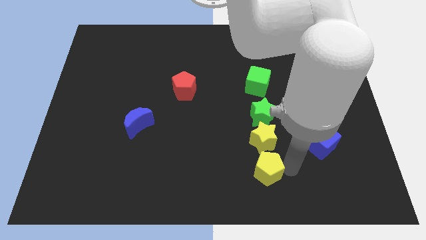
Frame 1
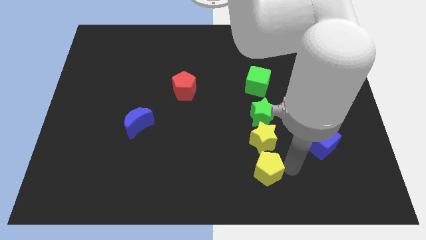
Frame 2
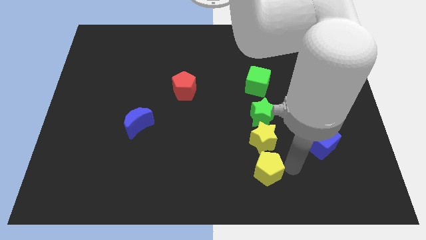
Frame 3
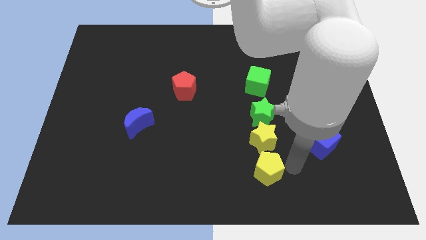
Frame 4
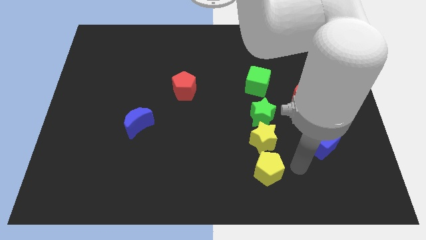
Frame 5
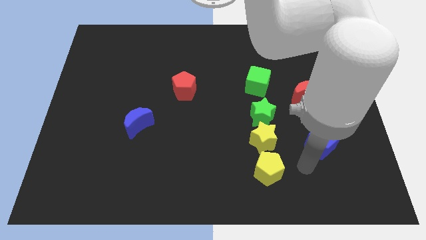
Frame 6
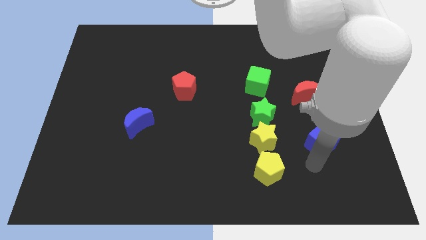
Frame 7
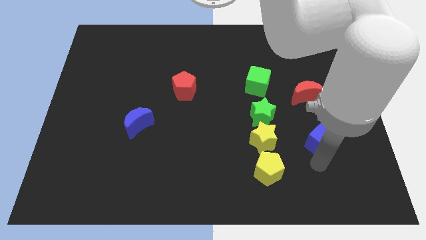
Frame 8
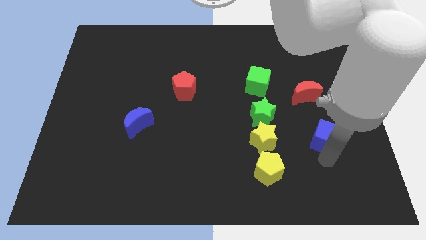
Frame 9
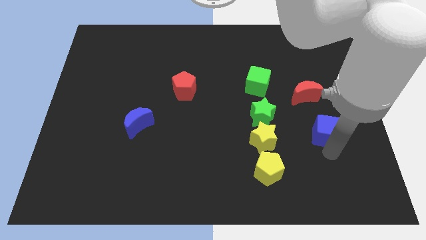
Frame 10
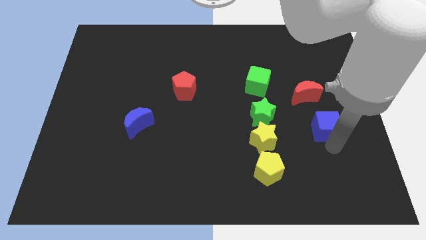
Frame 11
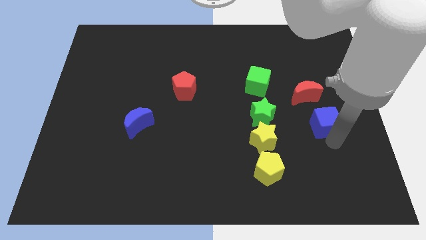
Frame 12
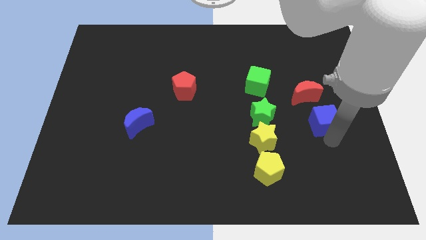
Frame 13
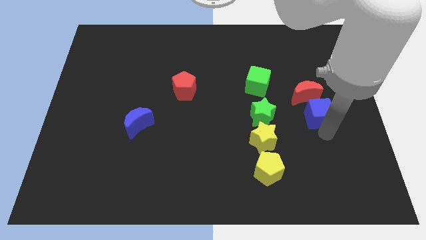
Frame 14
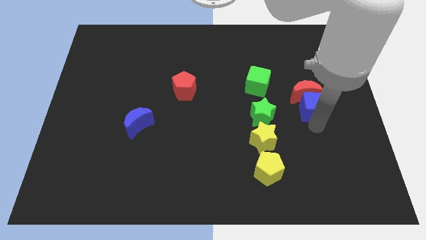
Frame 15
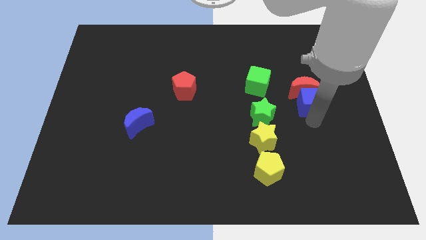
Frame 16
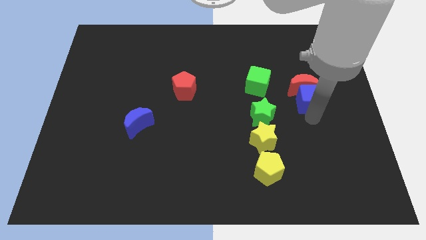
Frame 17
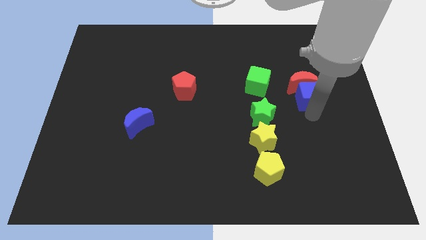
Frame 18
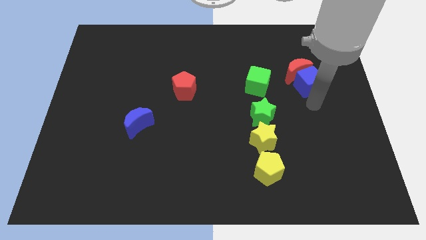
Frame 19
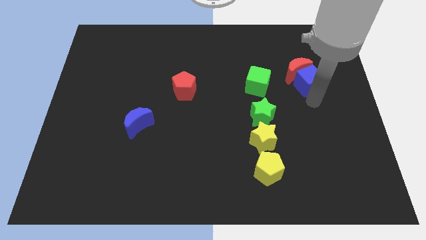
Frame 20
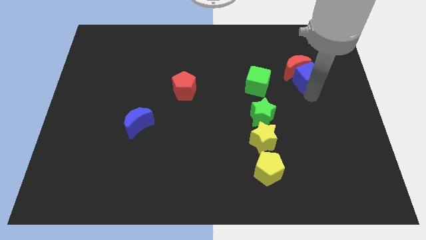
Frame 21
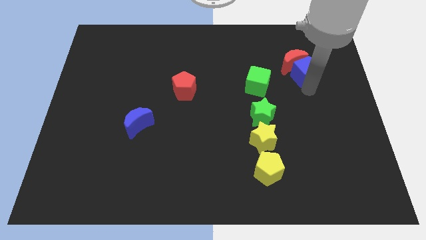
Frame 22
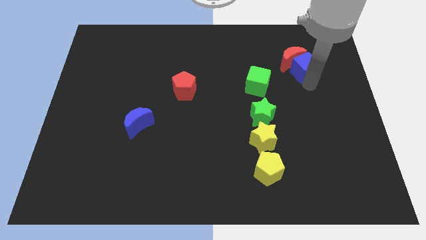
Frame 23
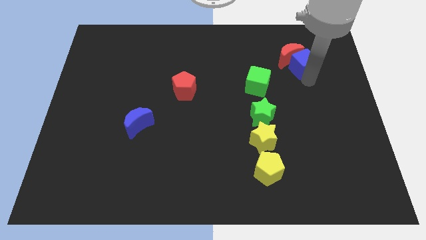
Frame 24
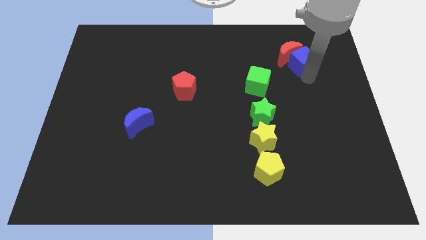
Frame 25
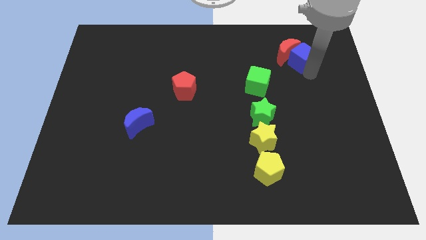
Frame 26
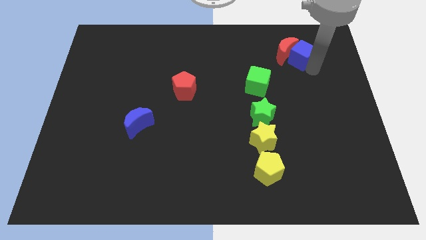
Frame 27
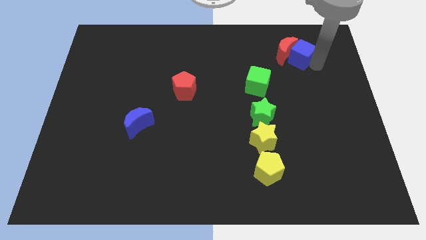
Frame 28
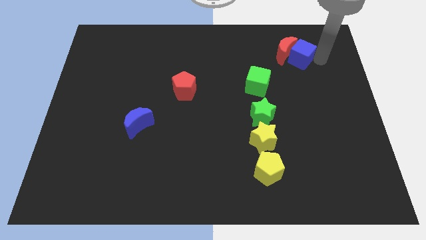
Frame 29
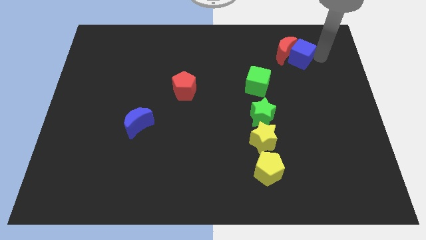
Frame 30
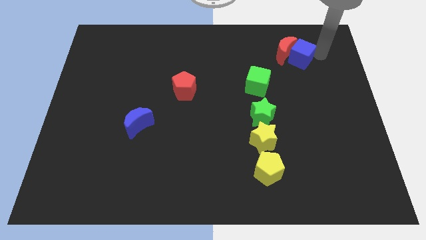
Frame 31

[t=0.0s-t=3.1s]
put the blue cube and red crescent diagonally above the top right side of the green cube

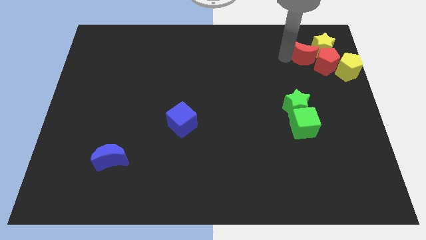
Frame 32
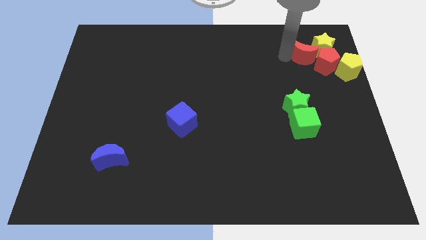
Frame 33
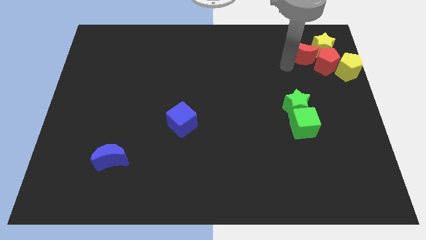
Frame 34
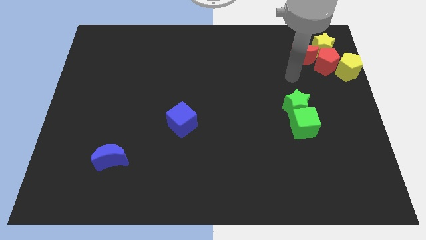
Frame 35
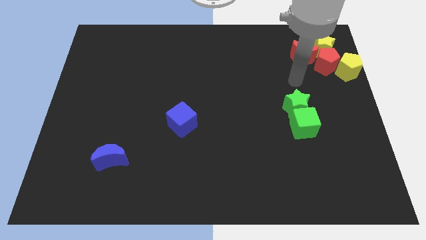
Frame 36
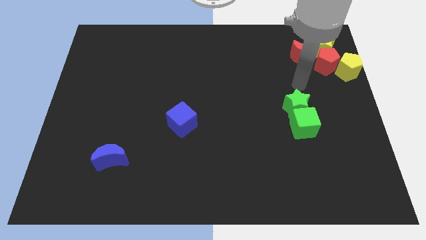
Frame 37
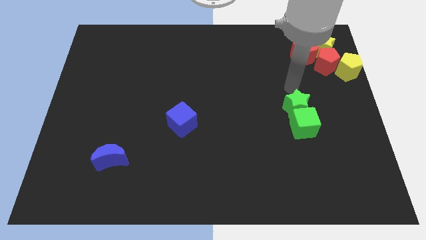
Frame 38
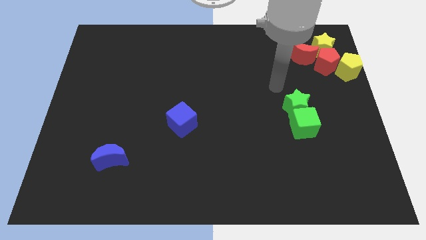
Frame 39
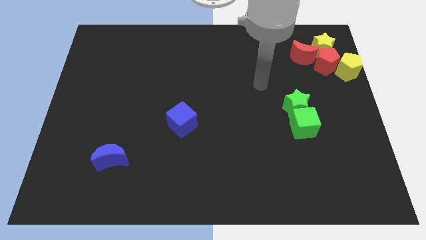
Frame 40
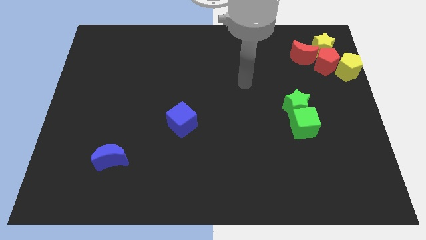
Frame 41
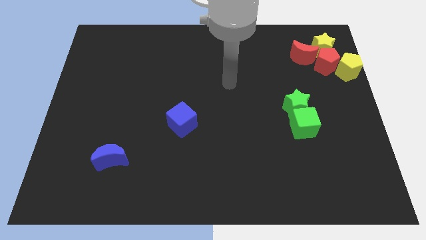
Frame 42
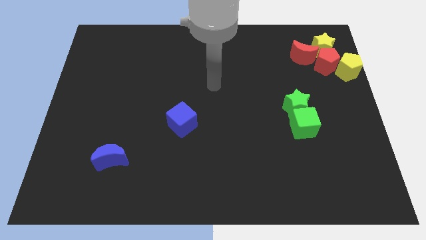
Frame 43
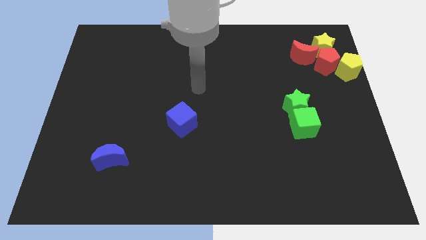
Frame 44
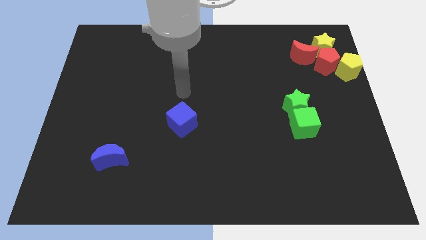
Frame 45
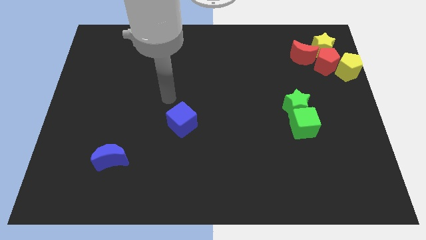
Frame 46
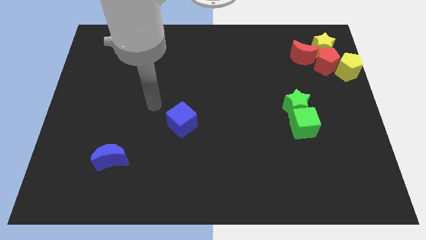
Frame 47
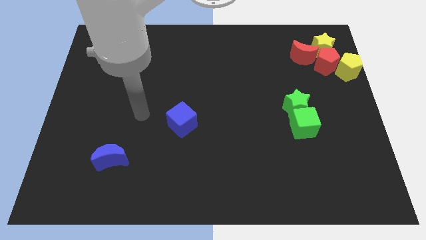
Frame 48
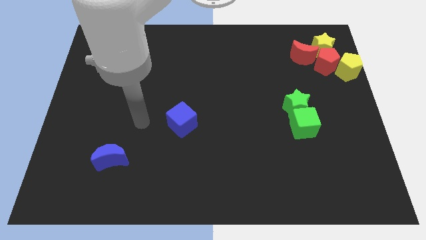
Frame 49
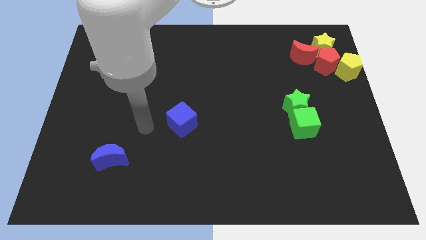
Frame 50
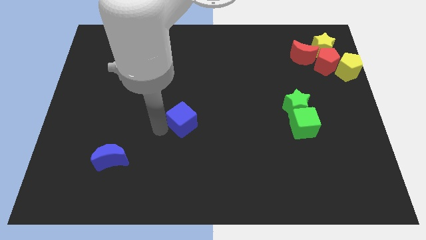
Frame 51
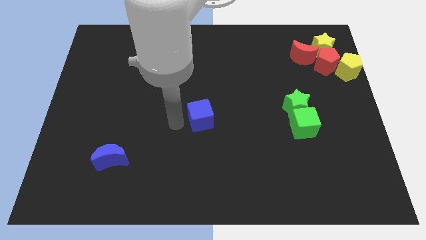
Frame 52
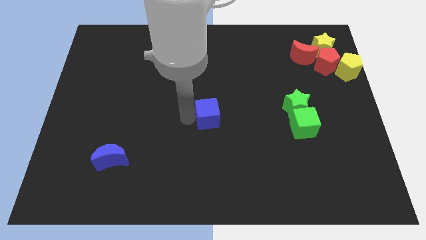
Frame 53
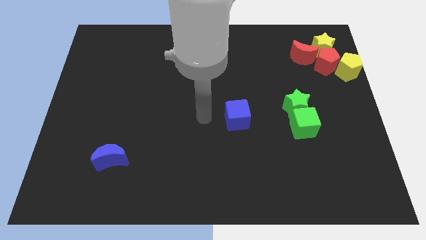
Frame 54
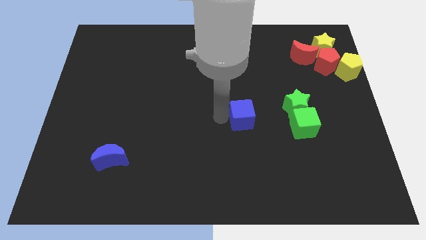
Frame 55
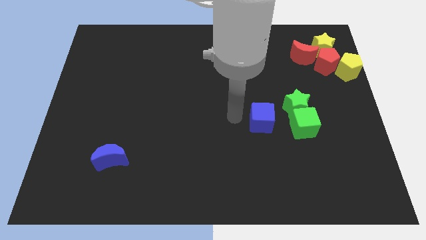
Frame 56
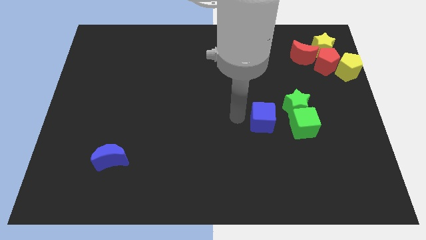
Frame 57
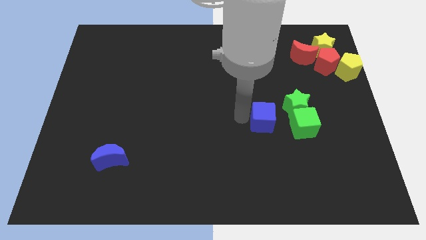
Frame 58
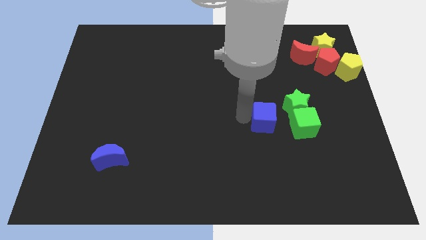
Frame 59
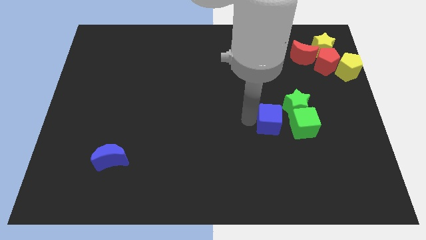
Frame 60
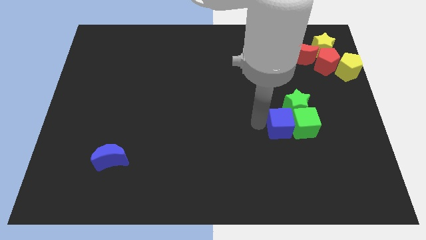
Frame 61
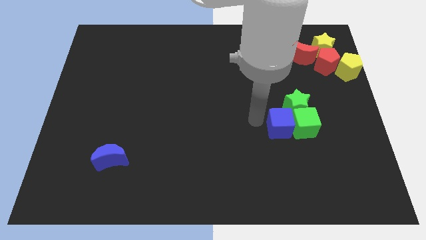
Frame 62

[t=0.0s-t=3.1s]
attach the blue cube to the green cube

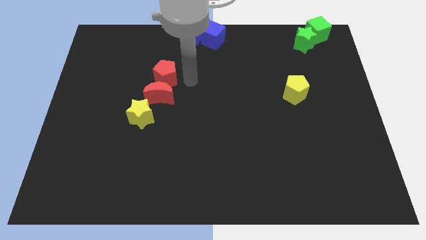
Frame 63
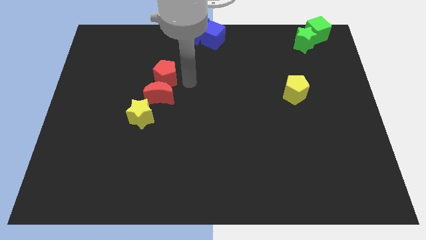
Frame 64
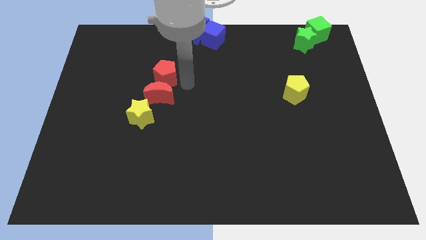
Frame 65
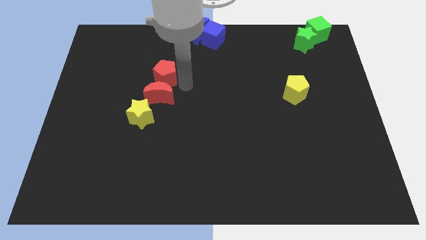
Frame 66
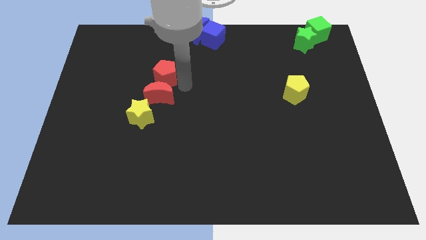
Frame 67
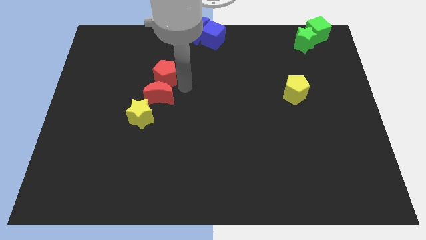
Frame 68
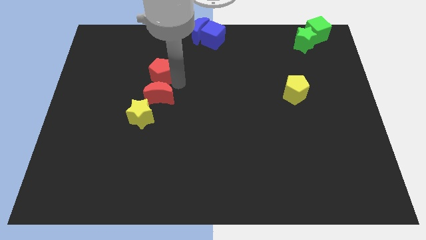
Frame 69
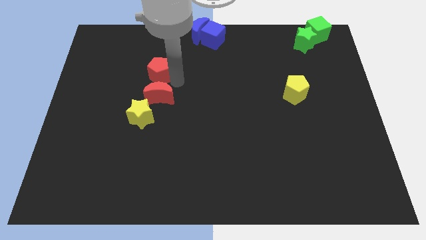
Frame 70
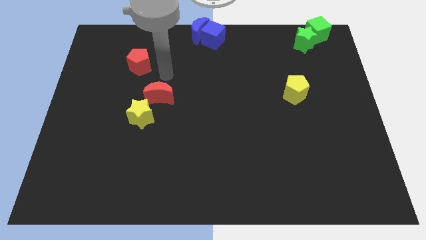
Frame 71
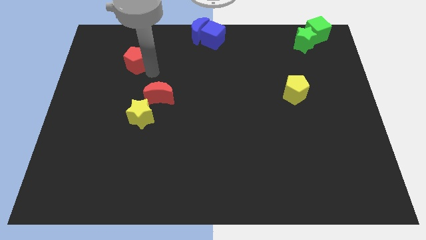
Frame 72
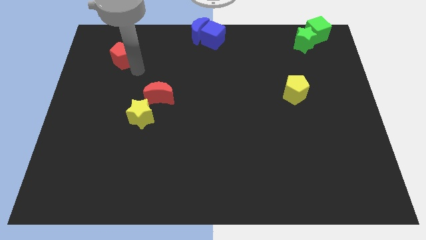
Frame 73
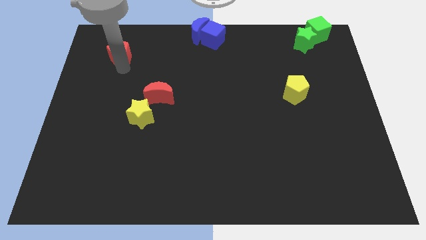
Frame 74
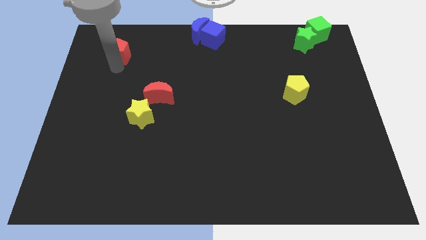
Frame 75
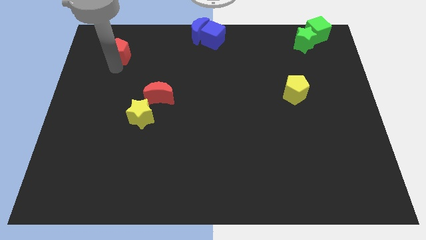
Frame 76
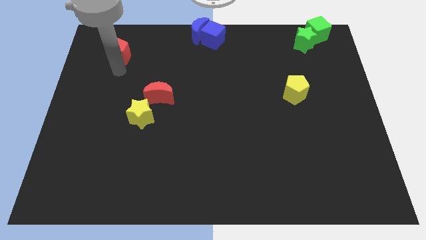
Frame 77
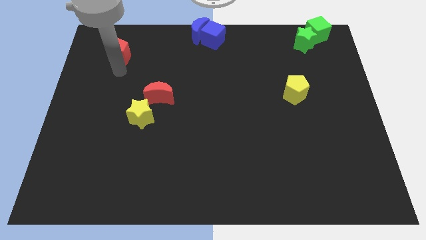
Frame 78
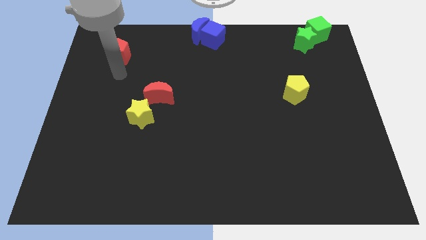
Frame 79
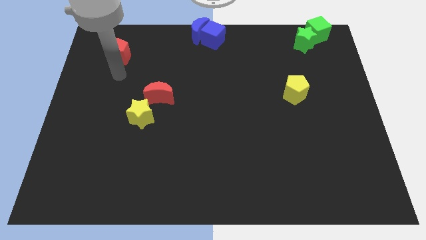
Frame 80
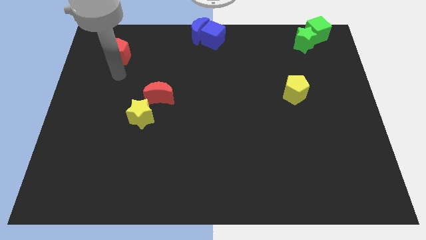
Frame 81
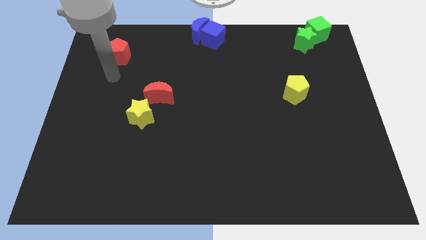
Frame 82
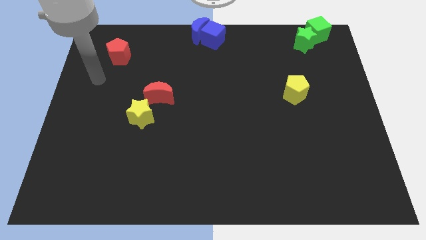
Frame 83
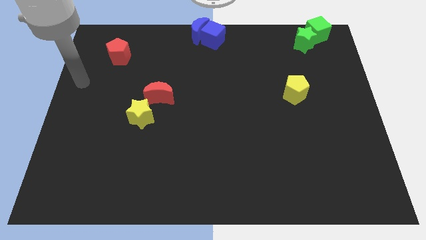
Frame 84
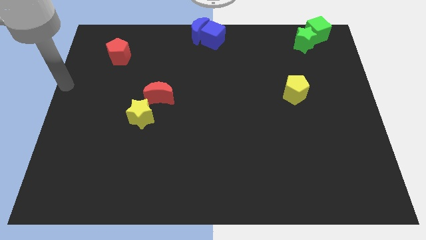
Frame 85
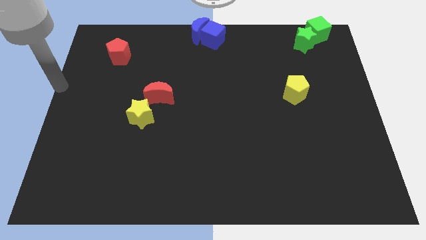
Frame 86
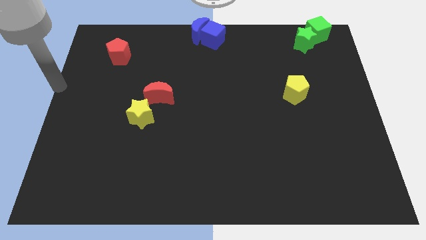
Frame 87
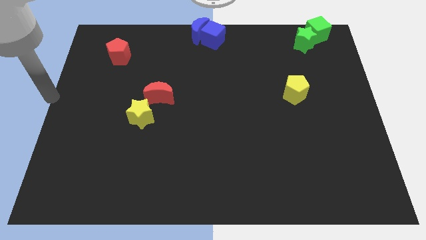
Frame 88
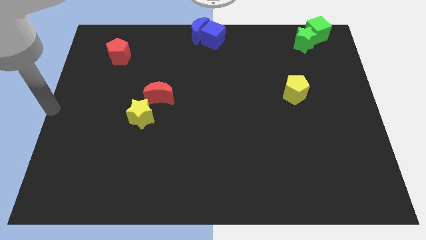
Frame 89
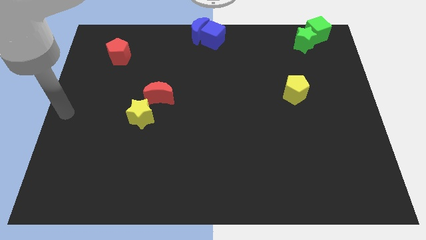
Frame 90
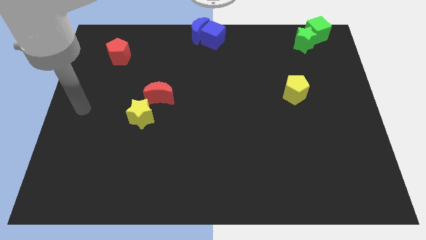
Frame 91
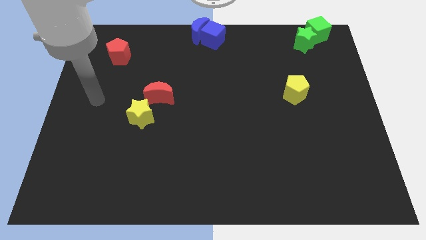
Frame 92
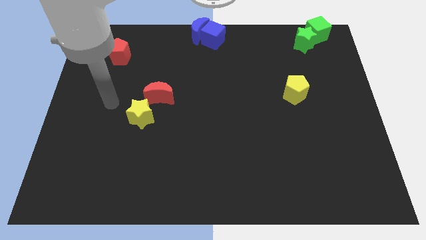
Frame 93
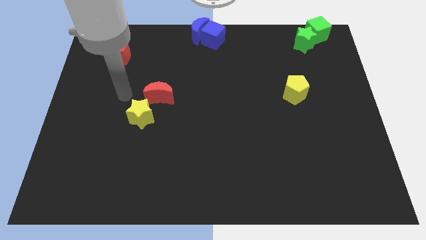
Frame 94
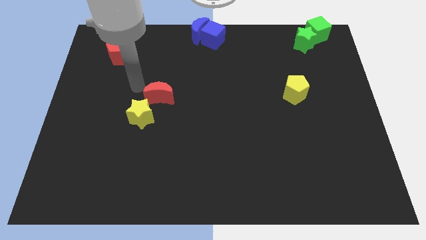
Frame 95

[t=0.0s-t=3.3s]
separate the red pentagon from the red moon
